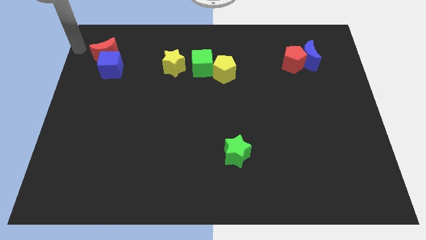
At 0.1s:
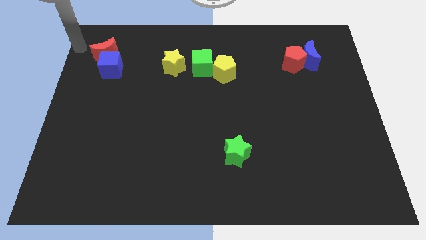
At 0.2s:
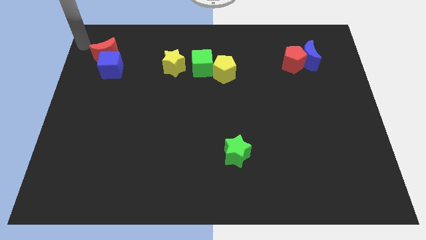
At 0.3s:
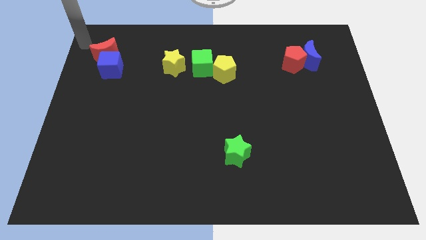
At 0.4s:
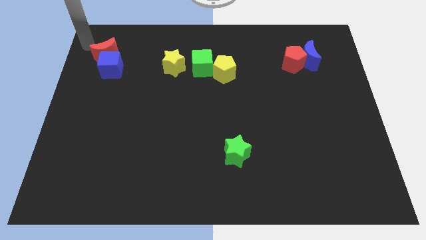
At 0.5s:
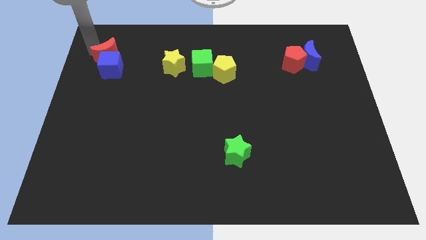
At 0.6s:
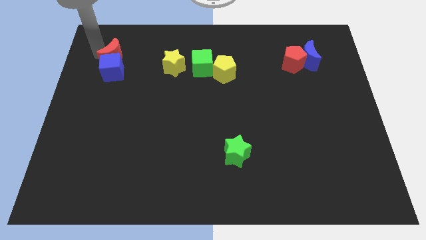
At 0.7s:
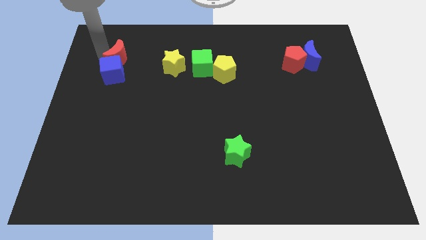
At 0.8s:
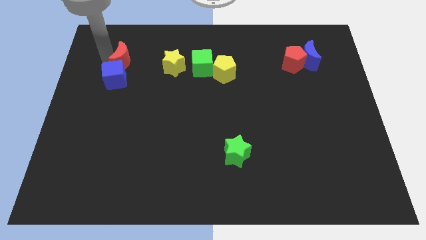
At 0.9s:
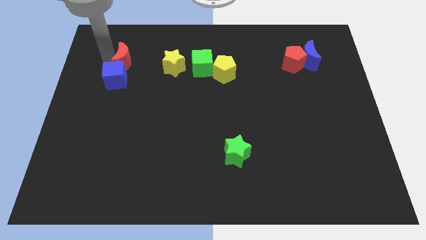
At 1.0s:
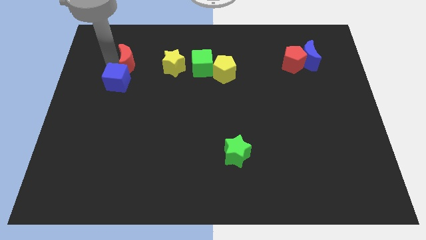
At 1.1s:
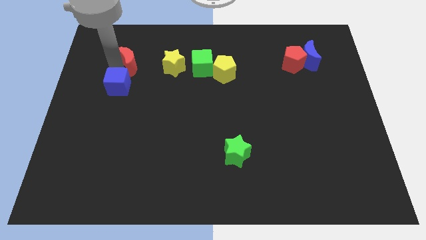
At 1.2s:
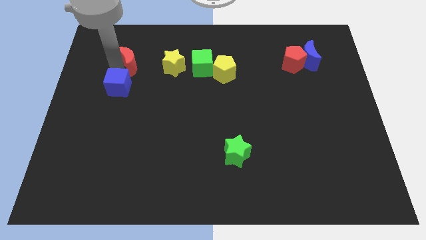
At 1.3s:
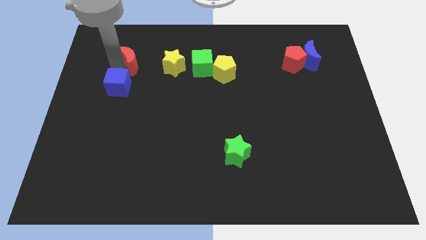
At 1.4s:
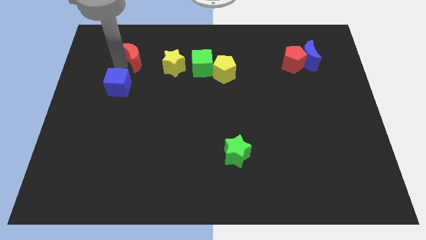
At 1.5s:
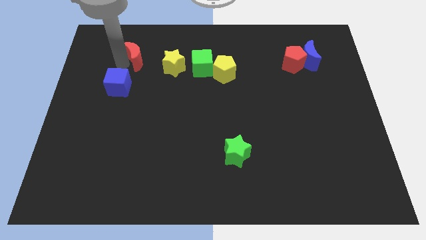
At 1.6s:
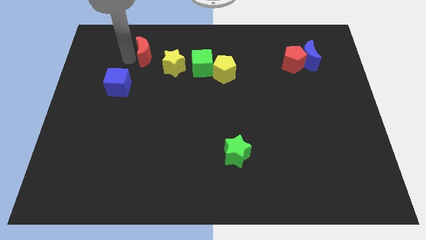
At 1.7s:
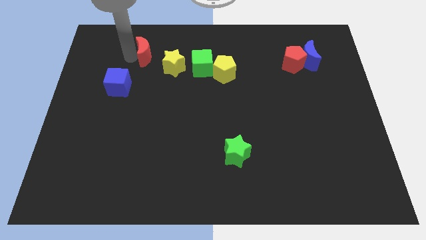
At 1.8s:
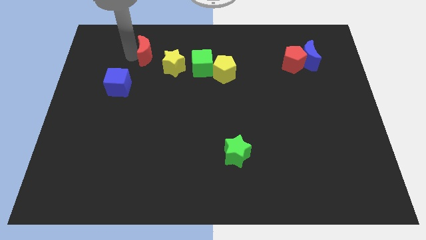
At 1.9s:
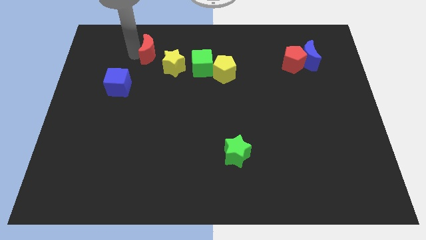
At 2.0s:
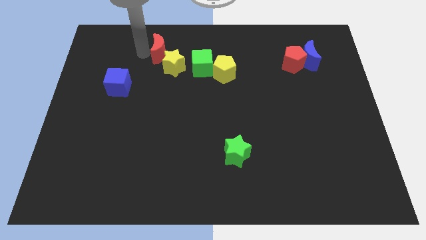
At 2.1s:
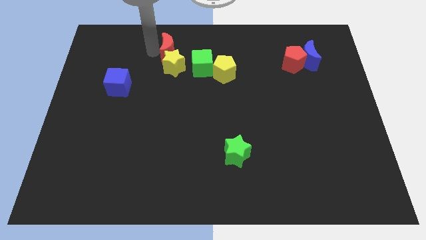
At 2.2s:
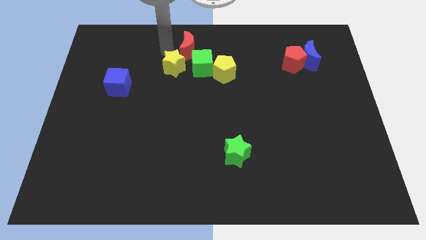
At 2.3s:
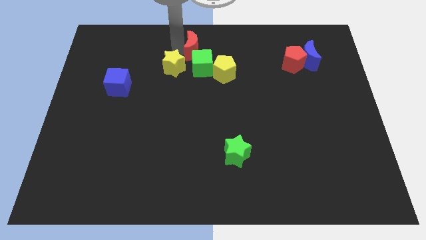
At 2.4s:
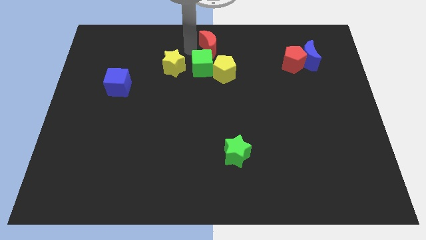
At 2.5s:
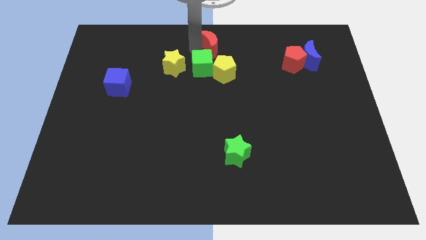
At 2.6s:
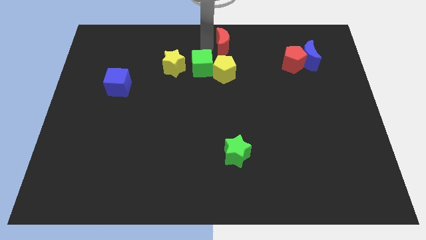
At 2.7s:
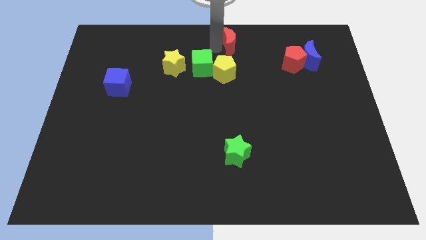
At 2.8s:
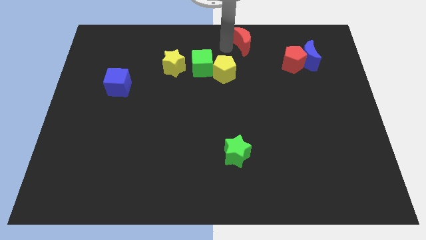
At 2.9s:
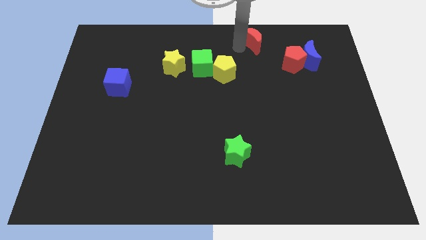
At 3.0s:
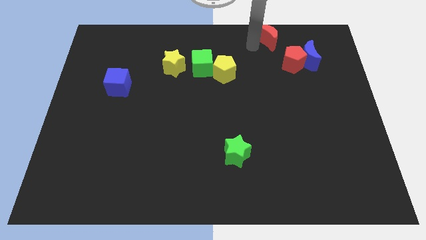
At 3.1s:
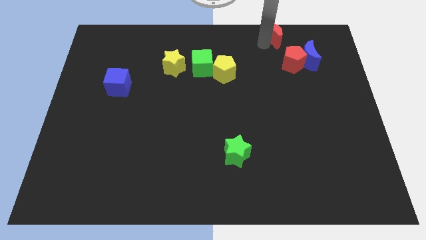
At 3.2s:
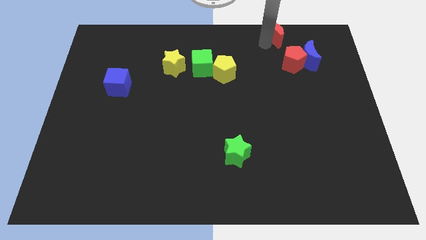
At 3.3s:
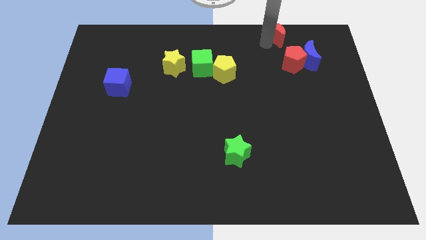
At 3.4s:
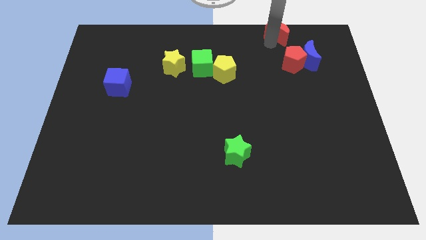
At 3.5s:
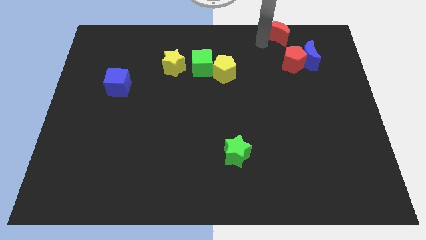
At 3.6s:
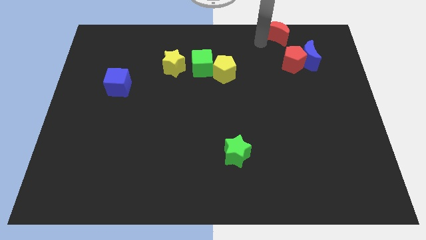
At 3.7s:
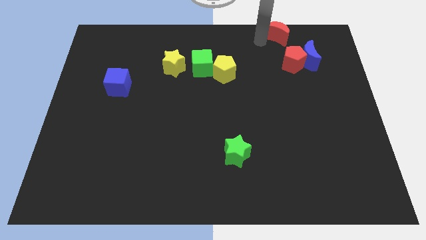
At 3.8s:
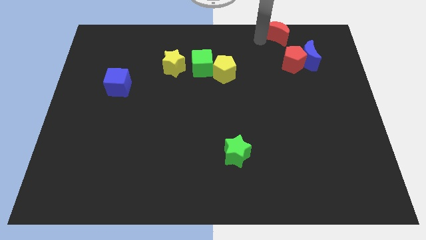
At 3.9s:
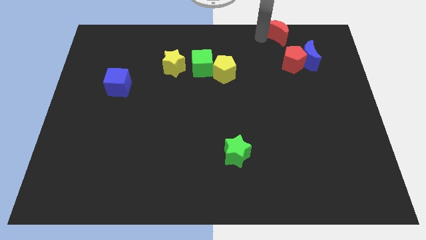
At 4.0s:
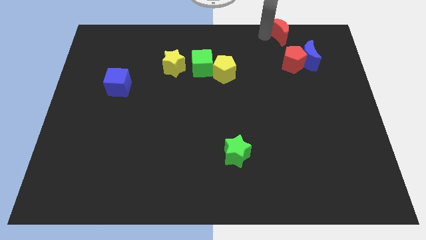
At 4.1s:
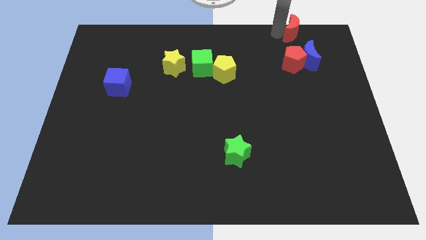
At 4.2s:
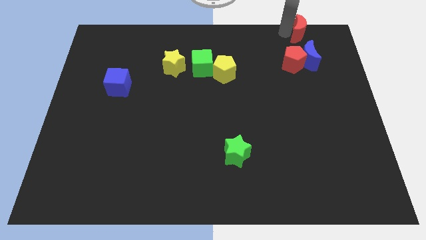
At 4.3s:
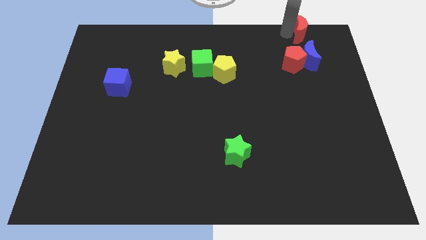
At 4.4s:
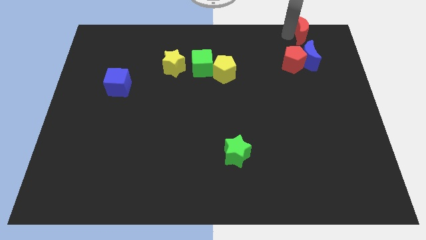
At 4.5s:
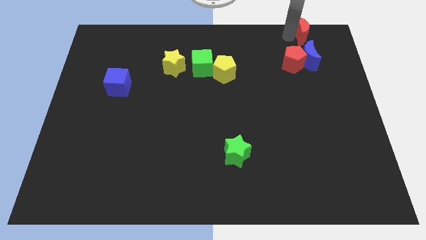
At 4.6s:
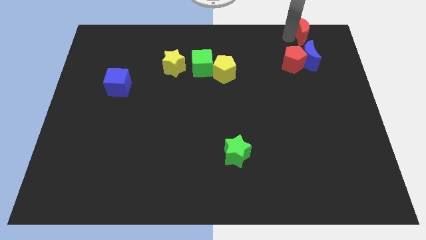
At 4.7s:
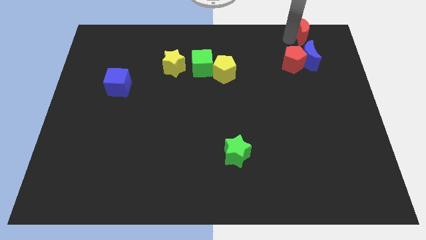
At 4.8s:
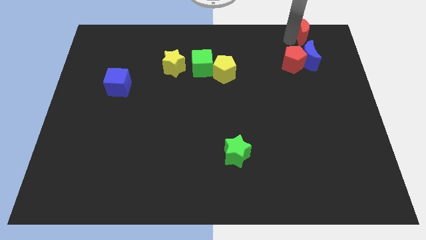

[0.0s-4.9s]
move the red moon above blue moon

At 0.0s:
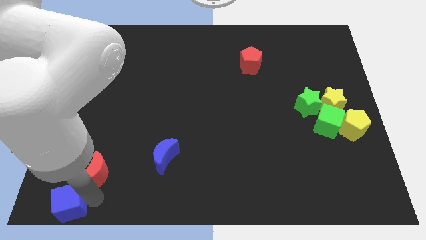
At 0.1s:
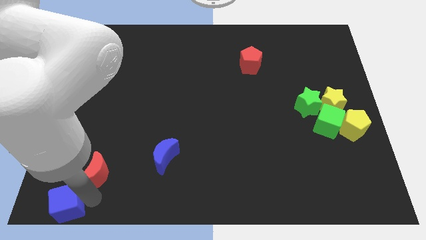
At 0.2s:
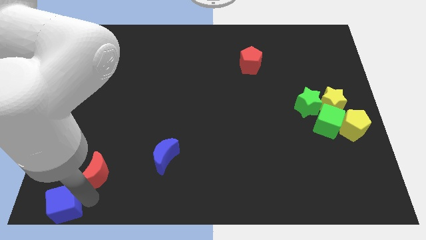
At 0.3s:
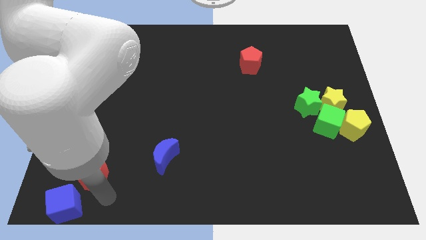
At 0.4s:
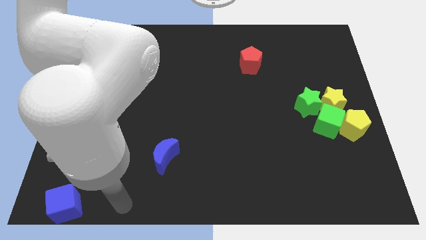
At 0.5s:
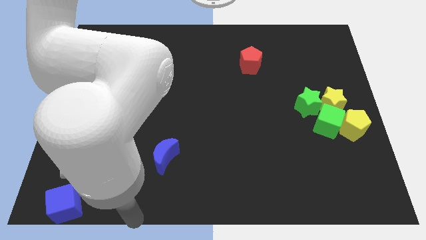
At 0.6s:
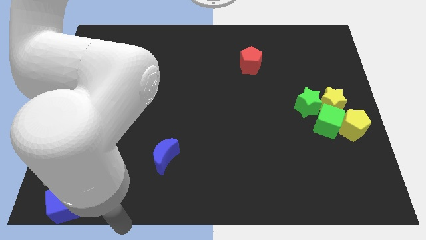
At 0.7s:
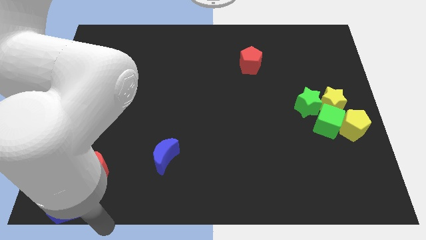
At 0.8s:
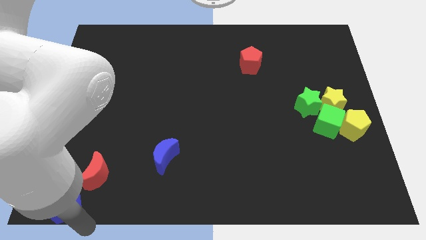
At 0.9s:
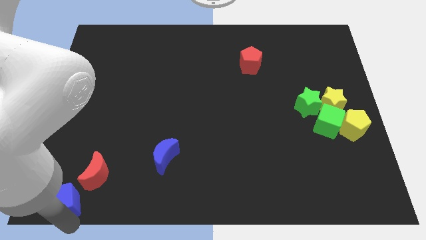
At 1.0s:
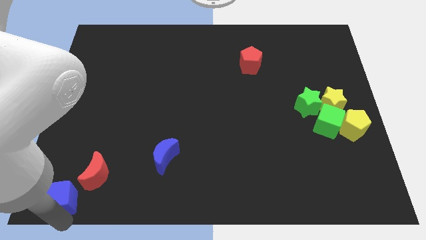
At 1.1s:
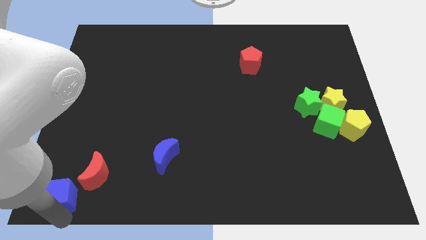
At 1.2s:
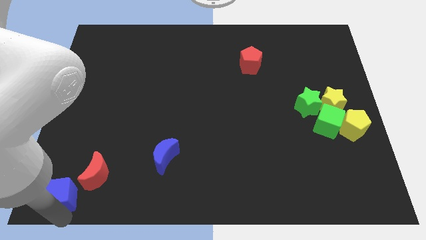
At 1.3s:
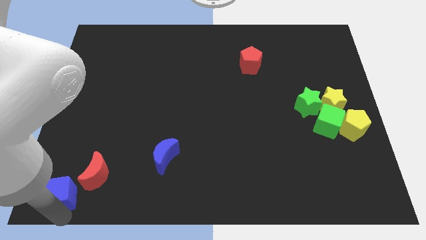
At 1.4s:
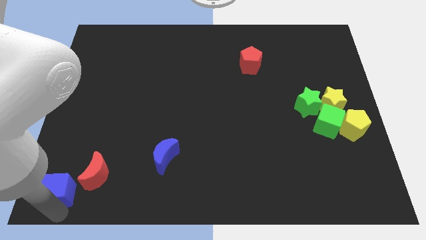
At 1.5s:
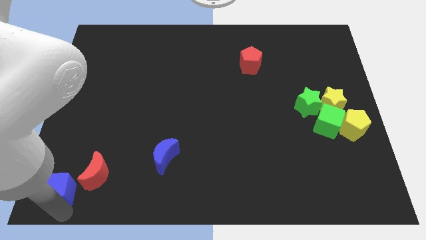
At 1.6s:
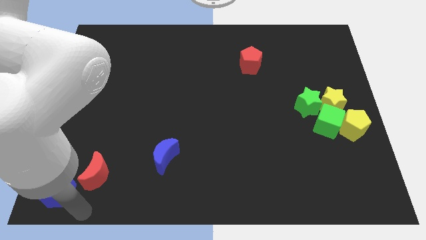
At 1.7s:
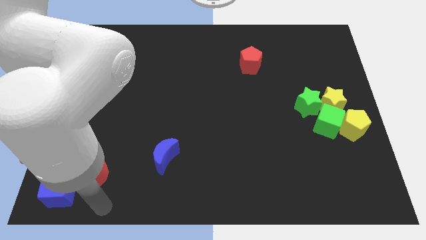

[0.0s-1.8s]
push the blue cube to the left of the red crescent

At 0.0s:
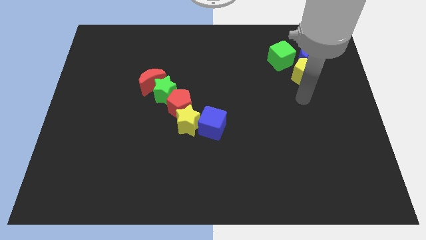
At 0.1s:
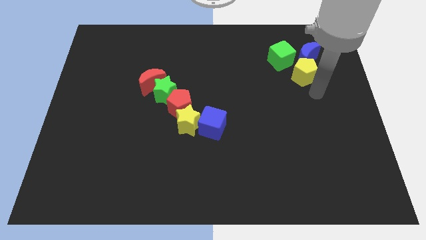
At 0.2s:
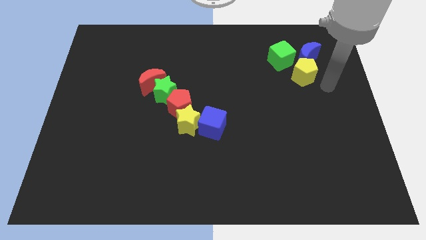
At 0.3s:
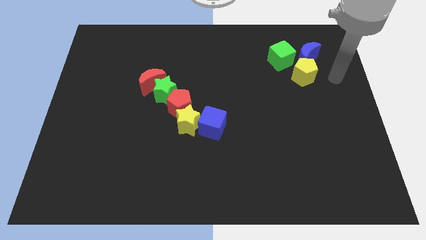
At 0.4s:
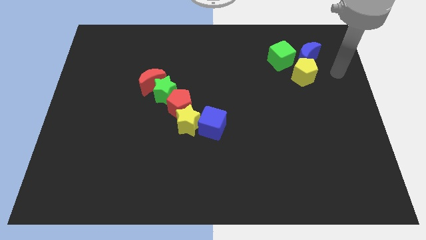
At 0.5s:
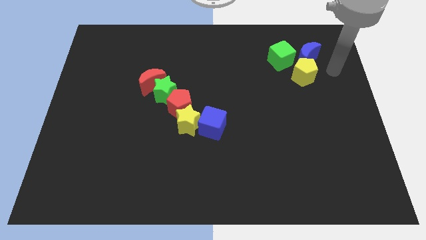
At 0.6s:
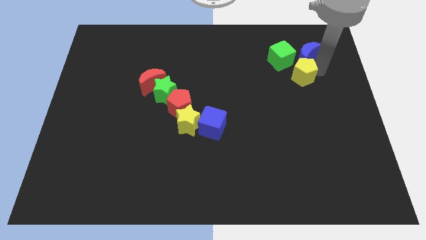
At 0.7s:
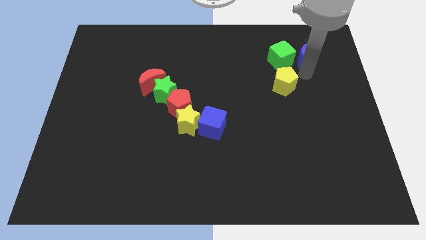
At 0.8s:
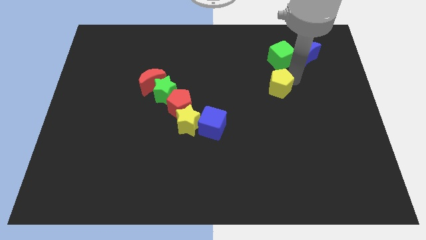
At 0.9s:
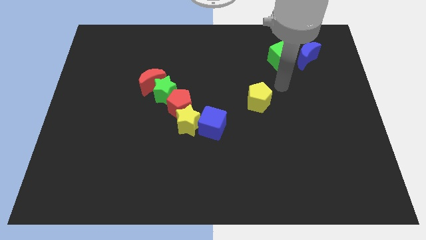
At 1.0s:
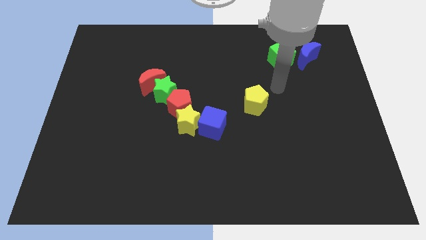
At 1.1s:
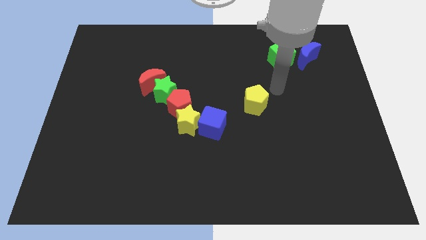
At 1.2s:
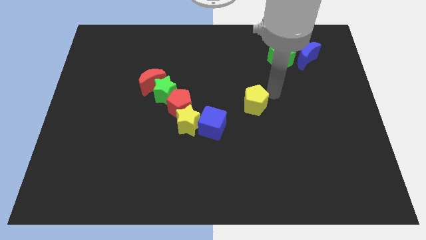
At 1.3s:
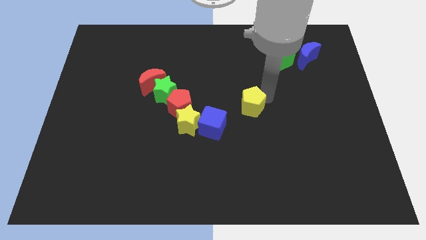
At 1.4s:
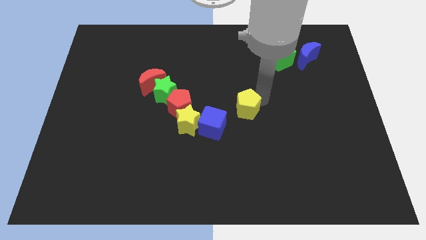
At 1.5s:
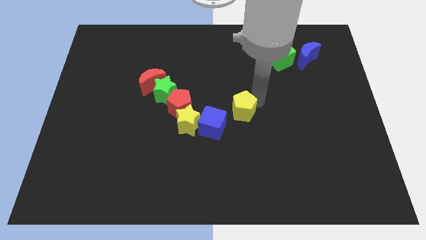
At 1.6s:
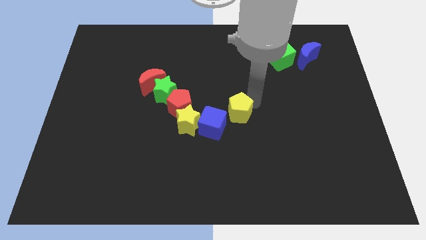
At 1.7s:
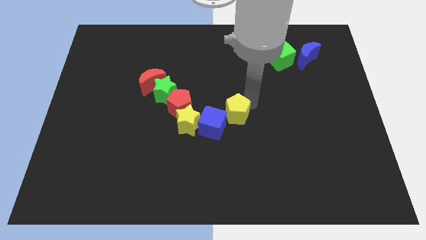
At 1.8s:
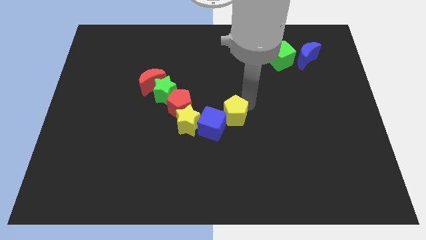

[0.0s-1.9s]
place the yellow star to the top right side of the blue cube

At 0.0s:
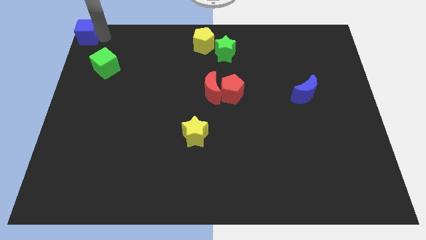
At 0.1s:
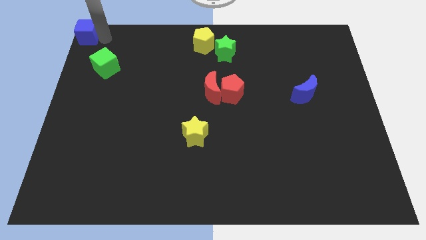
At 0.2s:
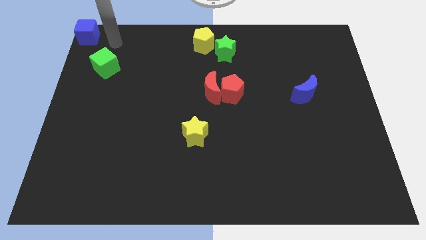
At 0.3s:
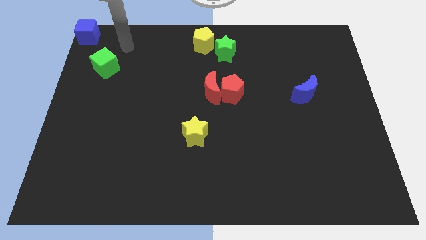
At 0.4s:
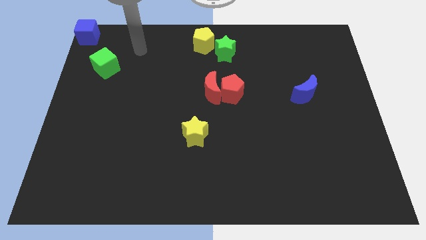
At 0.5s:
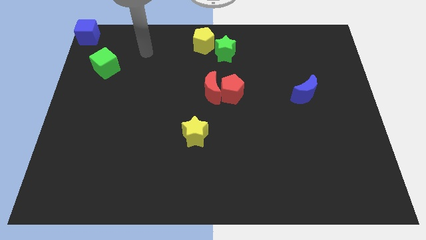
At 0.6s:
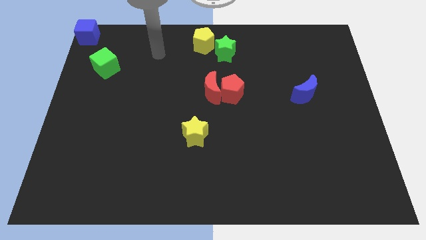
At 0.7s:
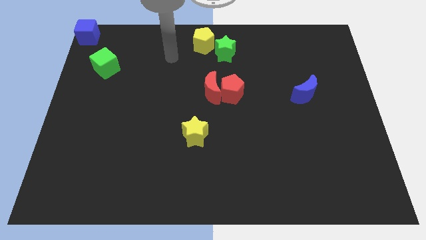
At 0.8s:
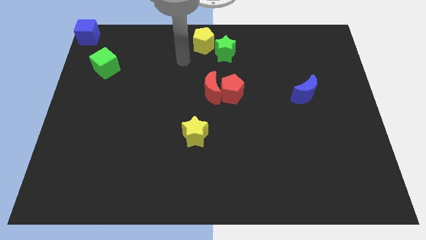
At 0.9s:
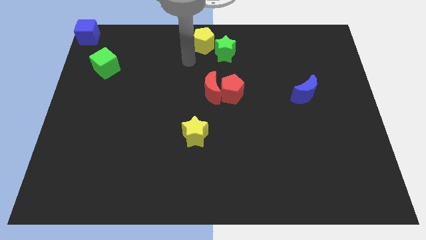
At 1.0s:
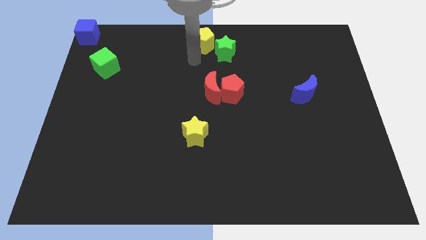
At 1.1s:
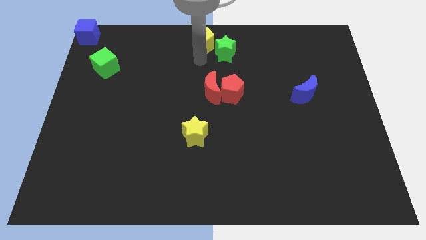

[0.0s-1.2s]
move your arm to the bottom of the yellow pentagon
